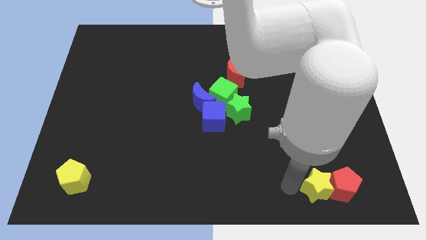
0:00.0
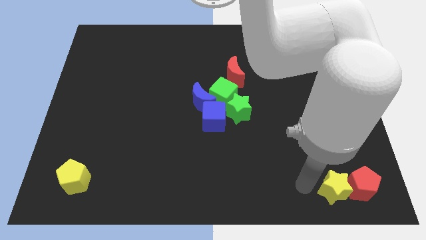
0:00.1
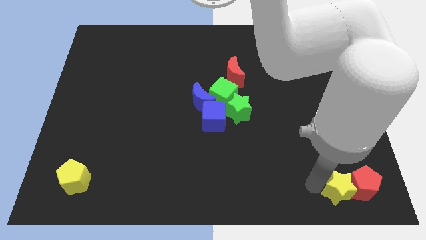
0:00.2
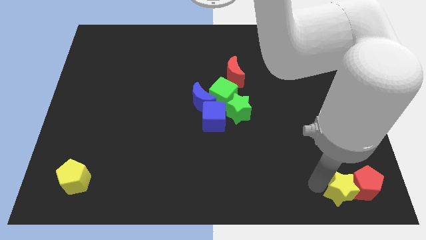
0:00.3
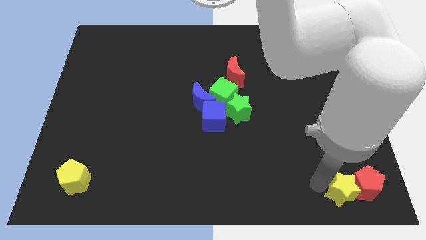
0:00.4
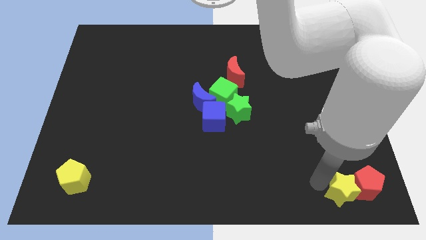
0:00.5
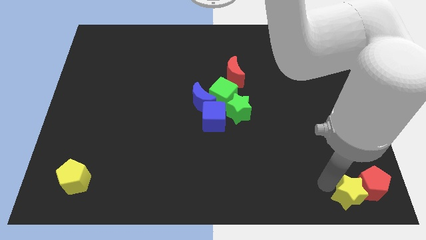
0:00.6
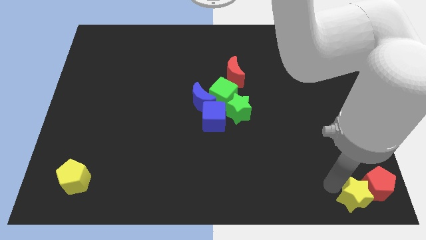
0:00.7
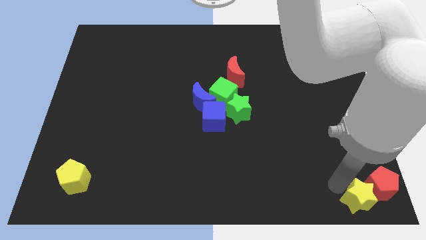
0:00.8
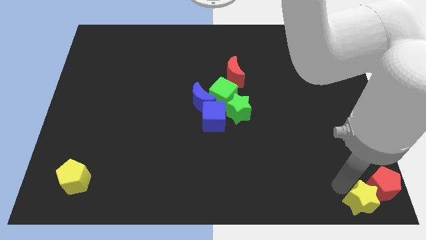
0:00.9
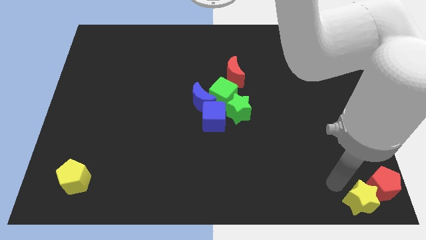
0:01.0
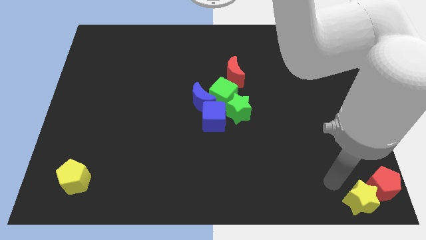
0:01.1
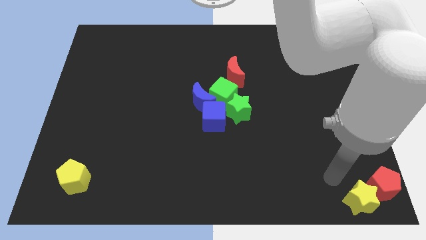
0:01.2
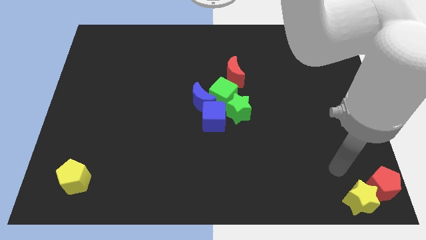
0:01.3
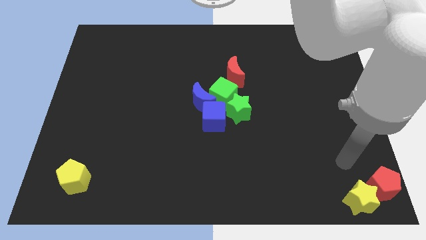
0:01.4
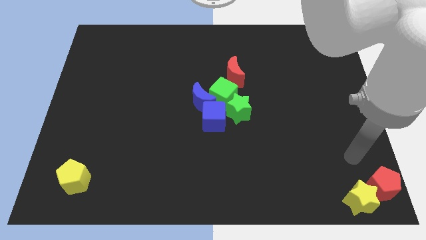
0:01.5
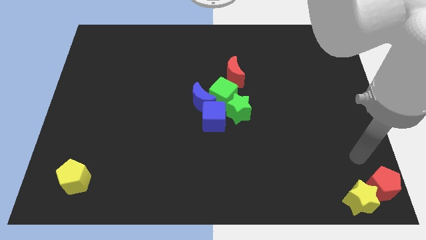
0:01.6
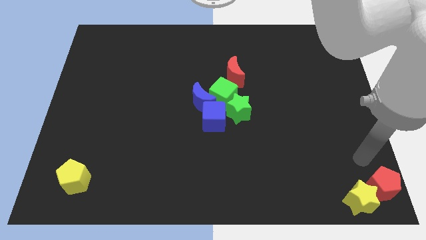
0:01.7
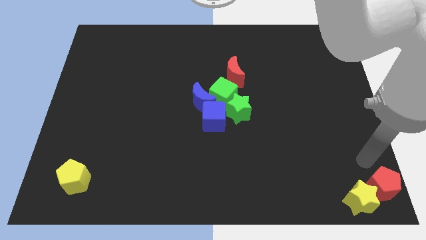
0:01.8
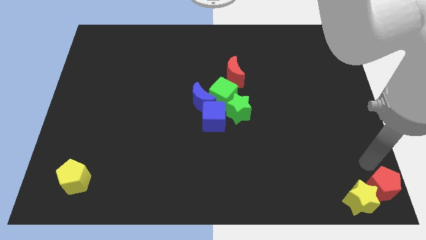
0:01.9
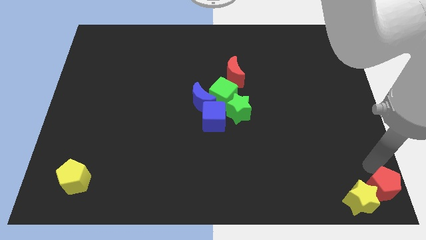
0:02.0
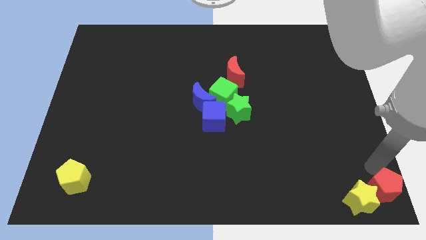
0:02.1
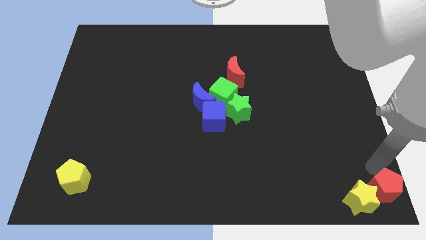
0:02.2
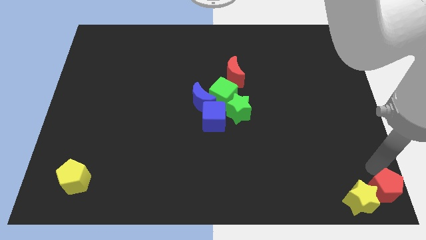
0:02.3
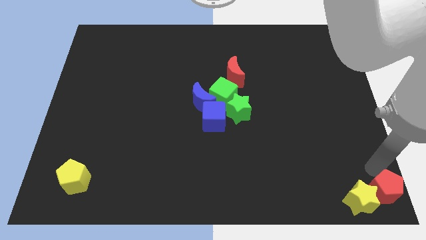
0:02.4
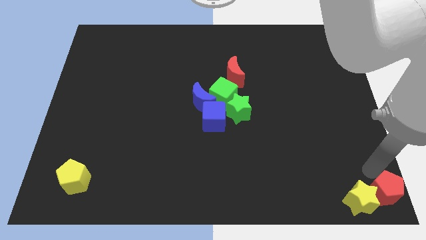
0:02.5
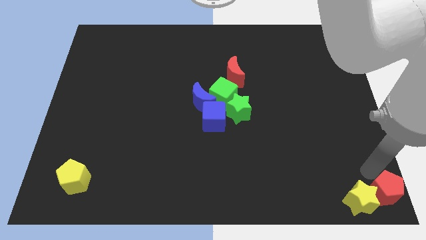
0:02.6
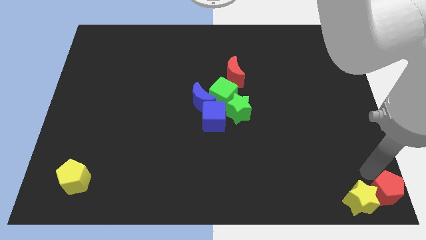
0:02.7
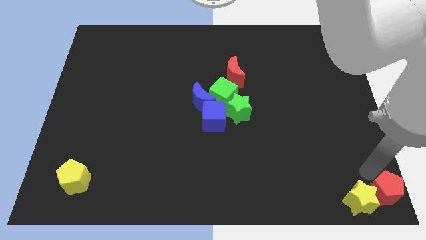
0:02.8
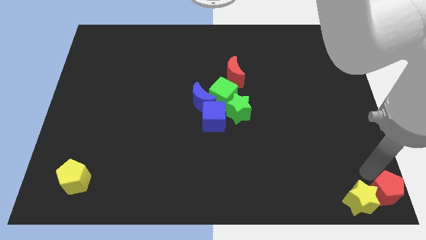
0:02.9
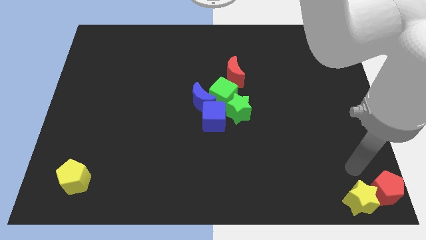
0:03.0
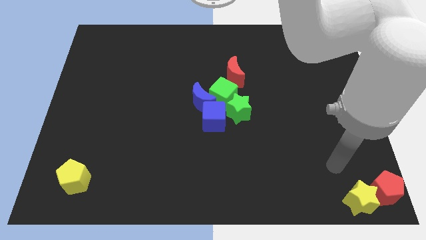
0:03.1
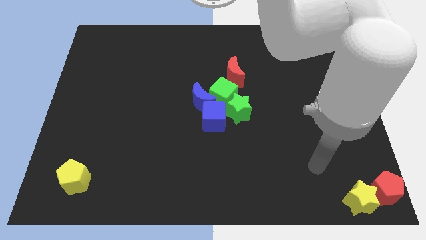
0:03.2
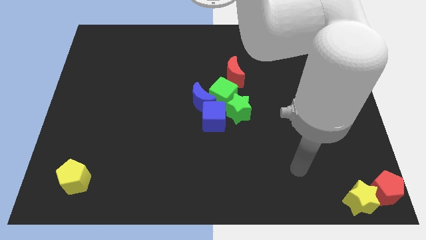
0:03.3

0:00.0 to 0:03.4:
push the yellow star and red pentagon to the bottom right

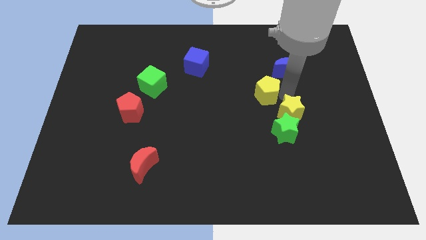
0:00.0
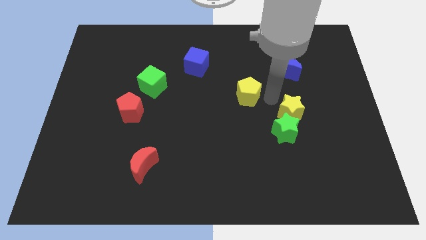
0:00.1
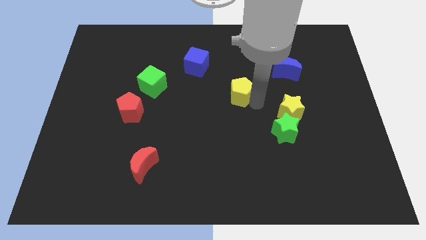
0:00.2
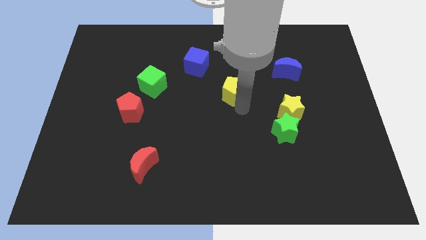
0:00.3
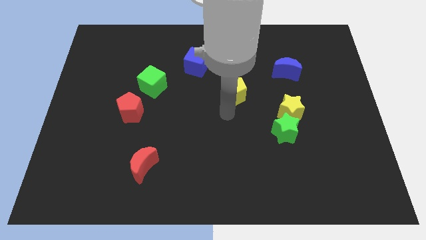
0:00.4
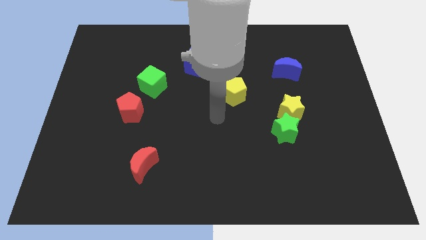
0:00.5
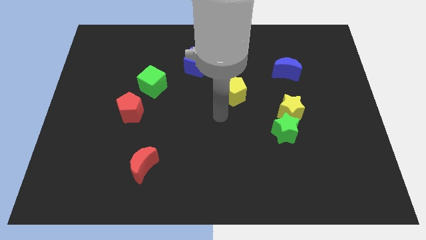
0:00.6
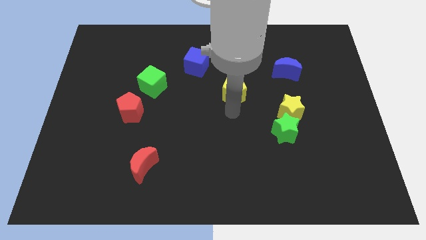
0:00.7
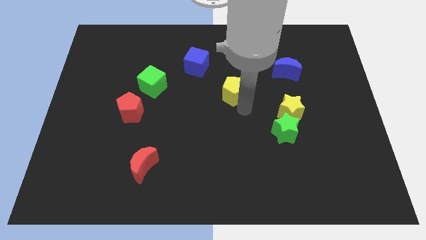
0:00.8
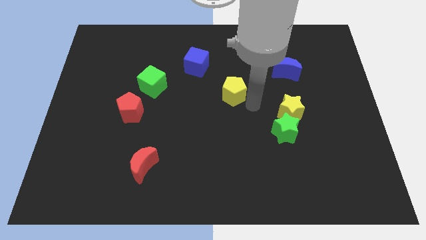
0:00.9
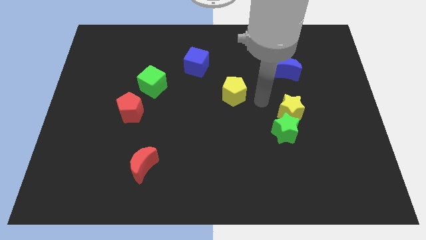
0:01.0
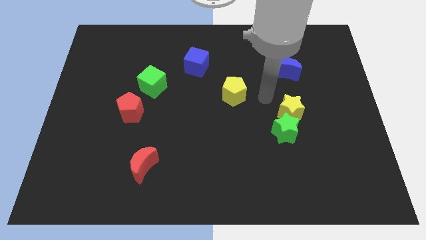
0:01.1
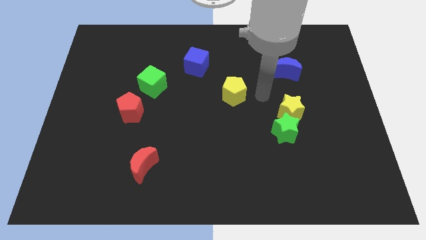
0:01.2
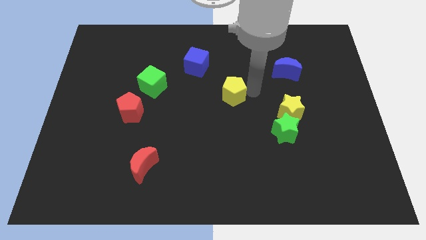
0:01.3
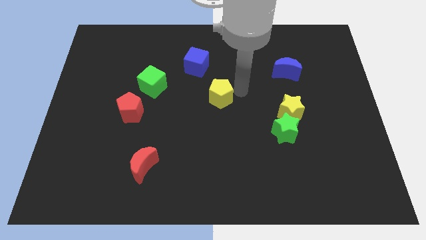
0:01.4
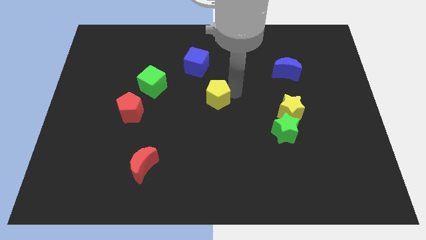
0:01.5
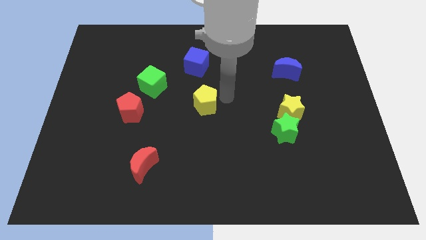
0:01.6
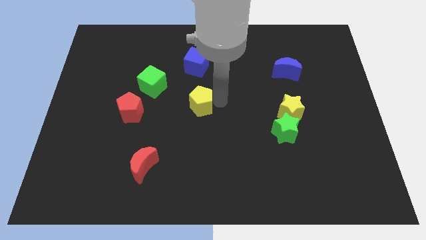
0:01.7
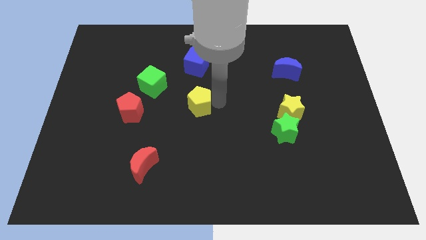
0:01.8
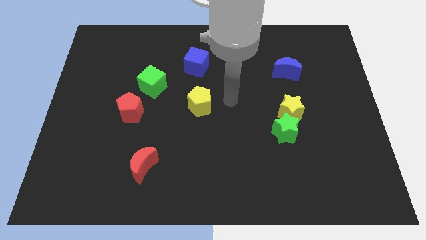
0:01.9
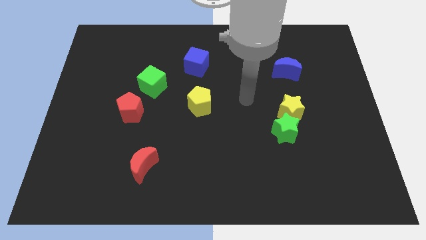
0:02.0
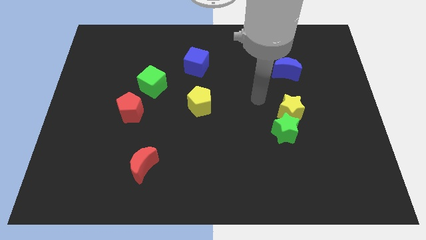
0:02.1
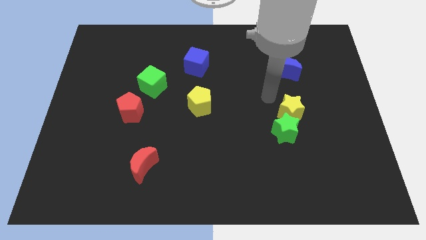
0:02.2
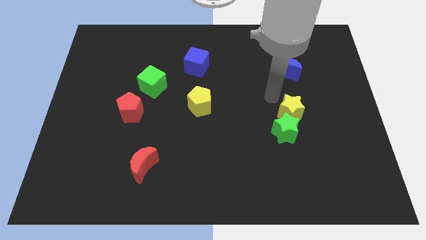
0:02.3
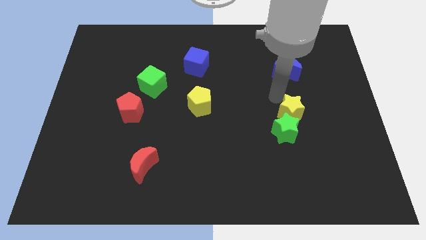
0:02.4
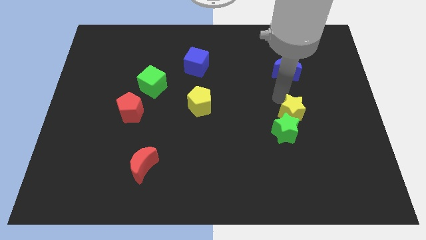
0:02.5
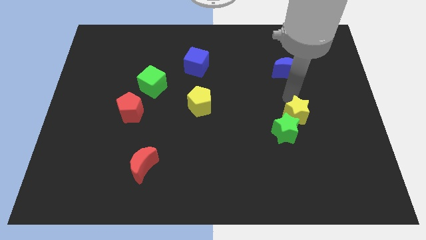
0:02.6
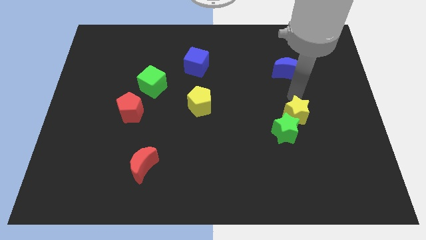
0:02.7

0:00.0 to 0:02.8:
move the yellow pentagon at the center of the board

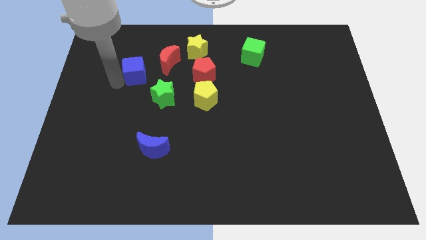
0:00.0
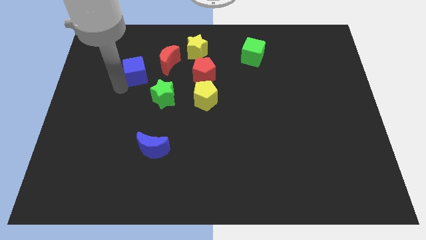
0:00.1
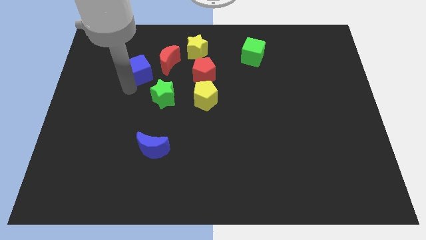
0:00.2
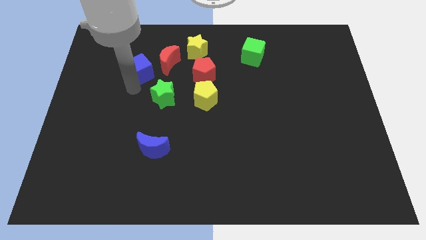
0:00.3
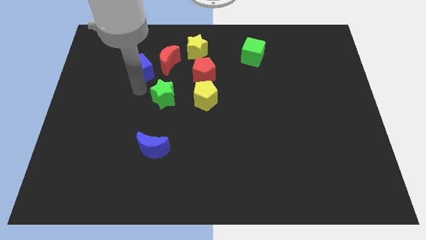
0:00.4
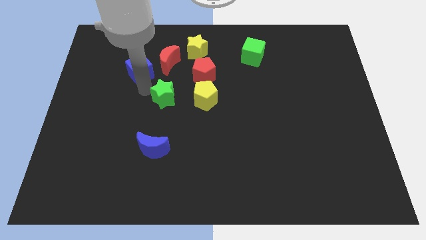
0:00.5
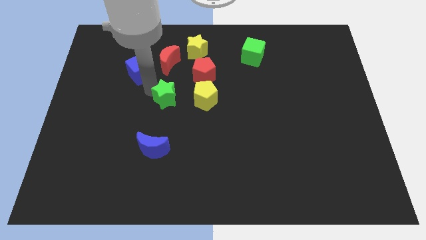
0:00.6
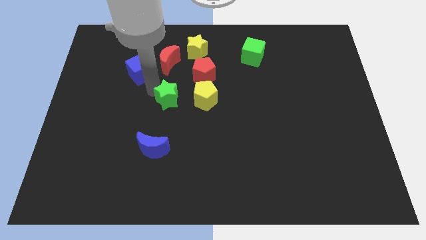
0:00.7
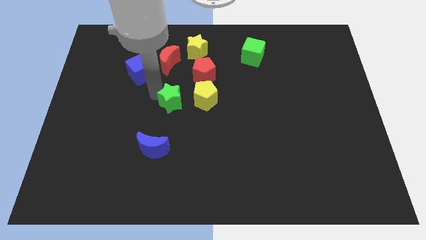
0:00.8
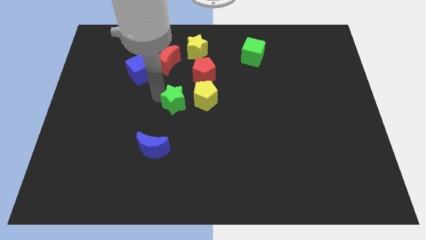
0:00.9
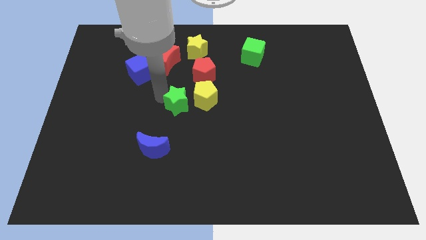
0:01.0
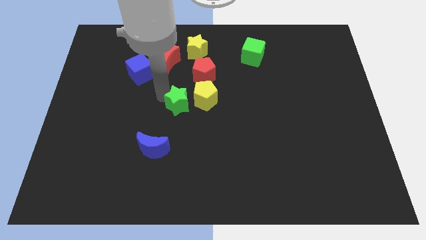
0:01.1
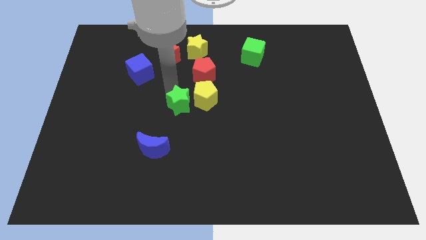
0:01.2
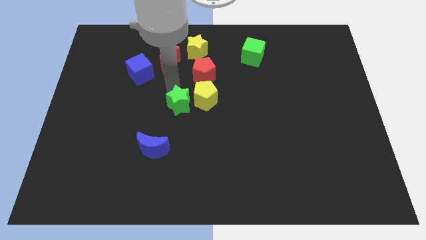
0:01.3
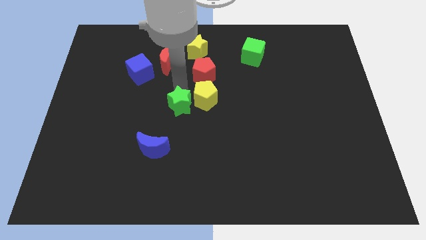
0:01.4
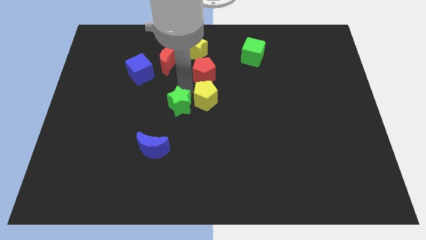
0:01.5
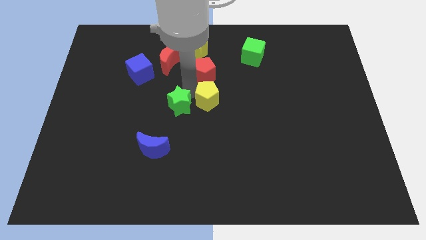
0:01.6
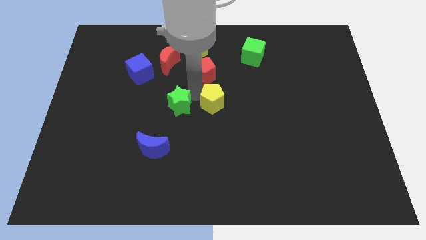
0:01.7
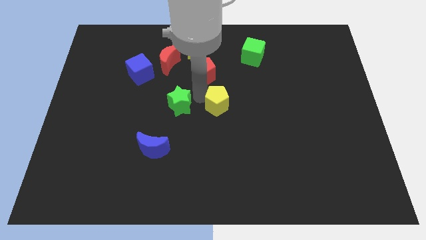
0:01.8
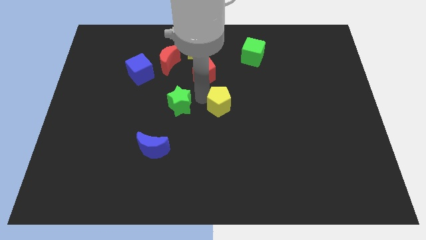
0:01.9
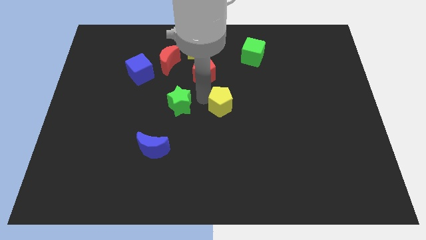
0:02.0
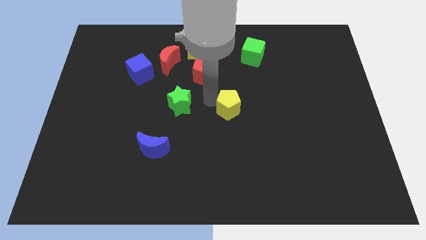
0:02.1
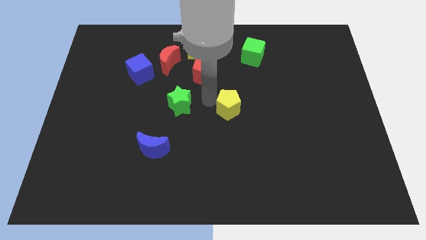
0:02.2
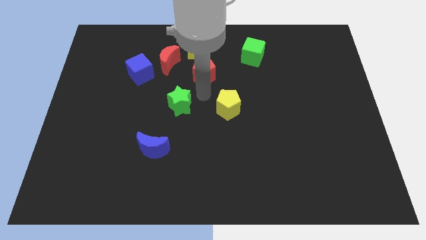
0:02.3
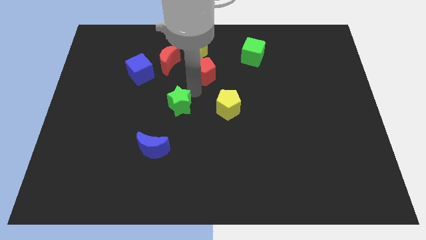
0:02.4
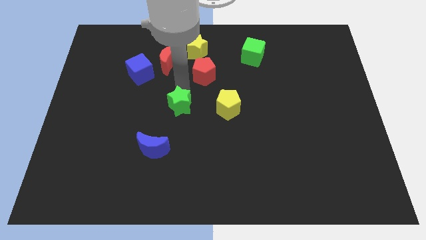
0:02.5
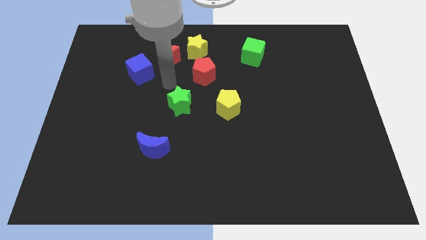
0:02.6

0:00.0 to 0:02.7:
place the yellow pentagon diagonal to the red pentagon

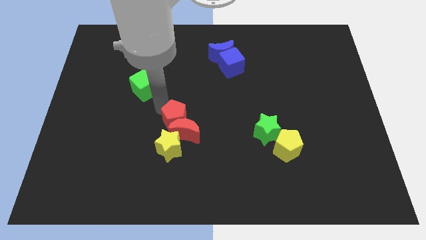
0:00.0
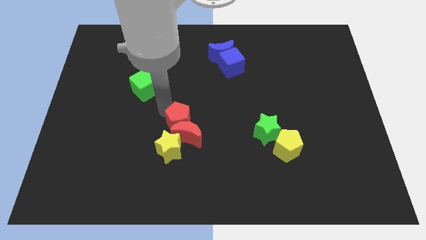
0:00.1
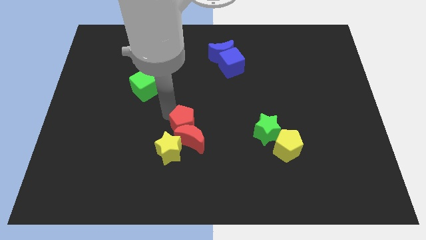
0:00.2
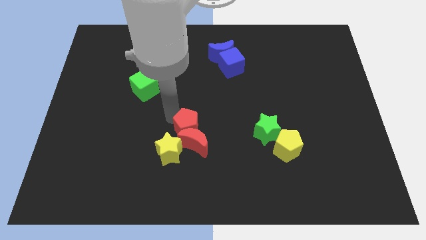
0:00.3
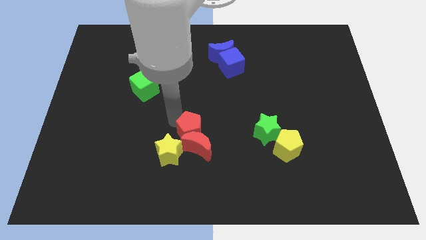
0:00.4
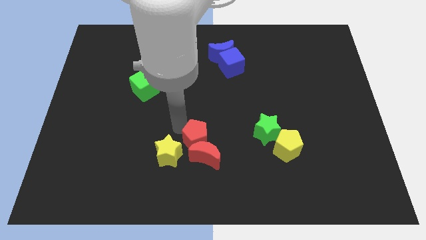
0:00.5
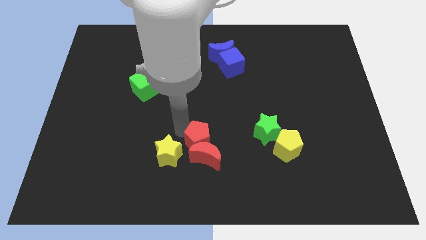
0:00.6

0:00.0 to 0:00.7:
move the group of blocks towards the bottom center of the board
